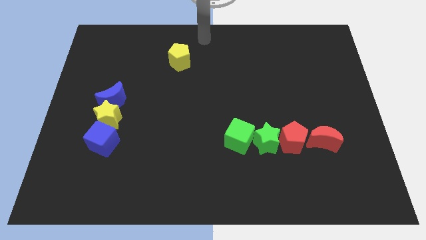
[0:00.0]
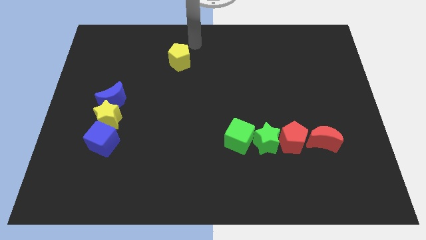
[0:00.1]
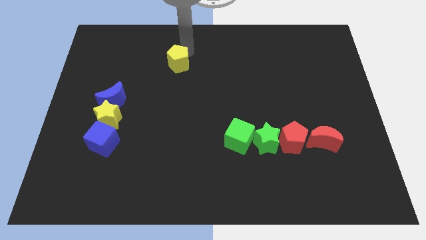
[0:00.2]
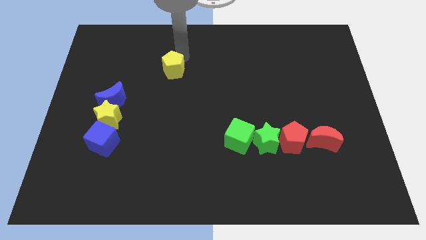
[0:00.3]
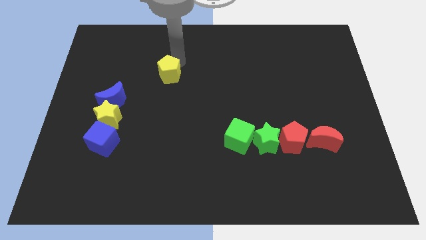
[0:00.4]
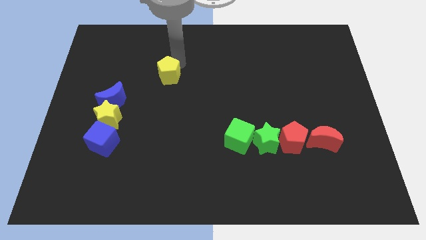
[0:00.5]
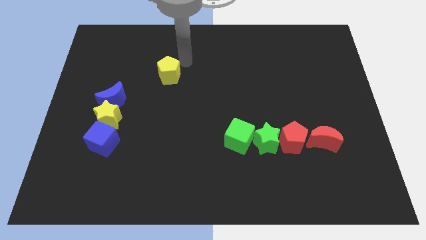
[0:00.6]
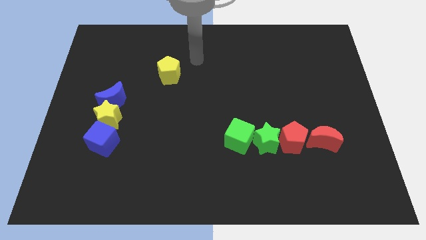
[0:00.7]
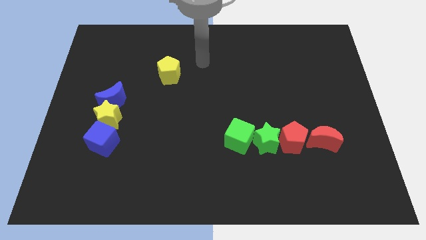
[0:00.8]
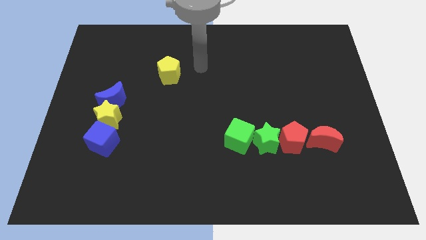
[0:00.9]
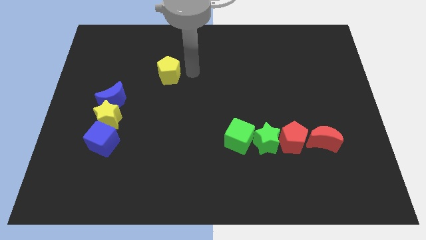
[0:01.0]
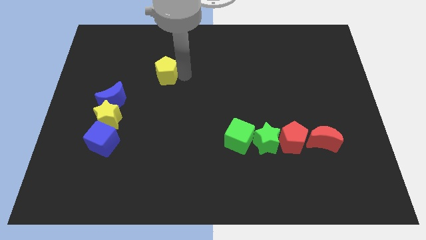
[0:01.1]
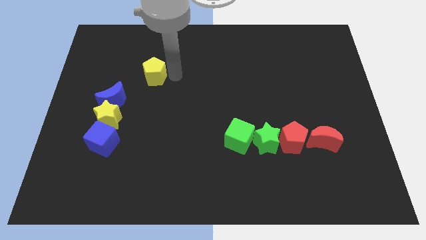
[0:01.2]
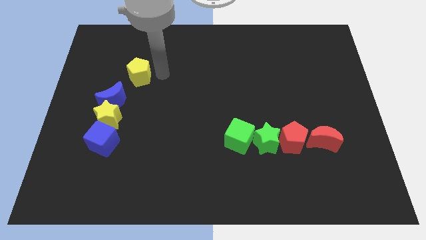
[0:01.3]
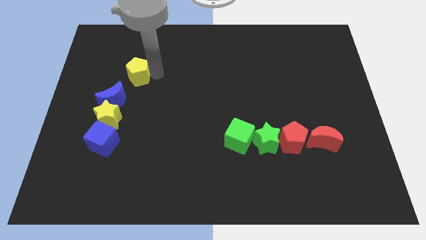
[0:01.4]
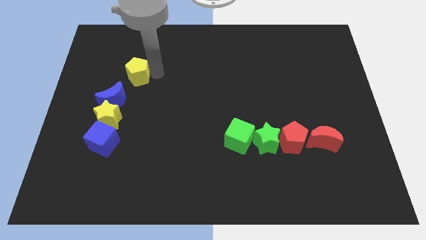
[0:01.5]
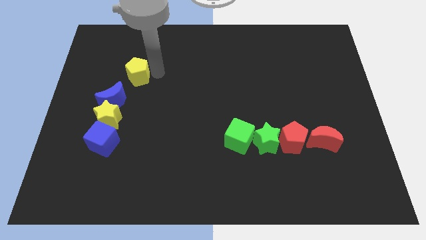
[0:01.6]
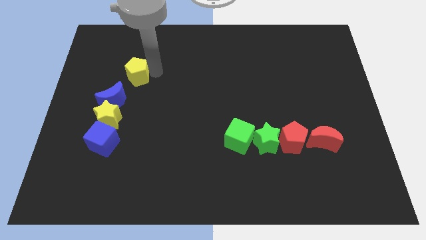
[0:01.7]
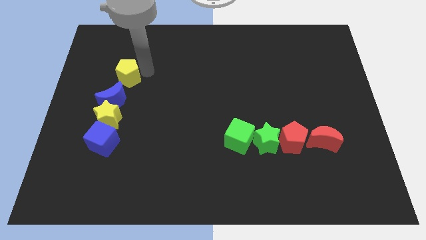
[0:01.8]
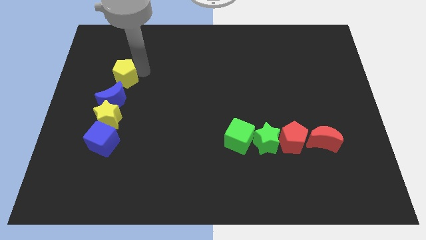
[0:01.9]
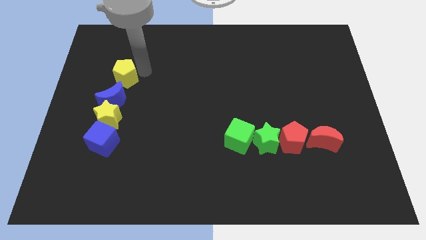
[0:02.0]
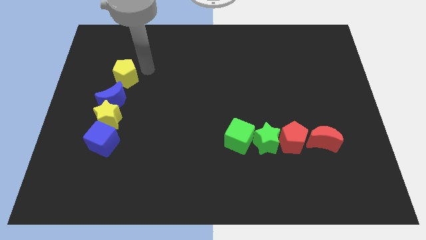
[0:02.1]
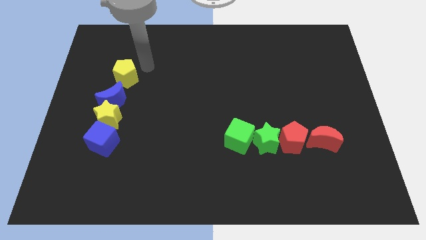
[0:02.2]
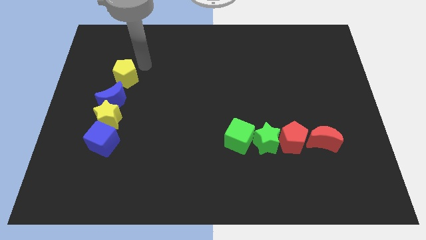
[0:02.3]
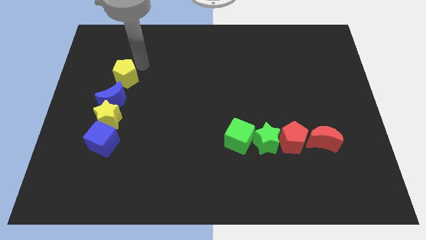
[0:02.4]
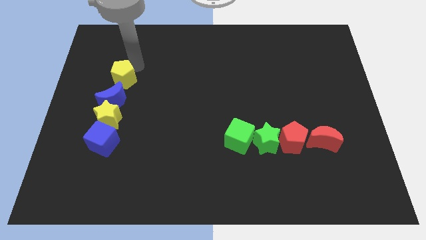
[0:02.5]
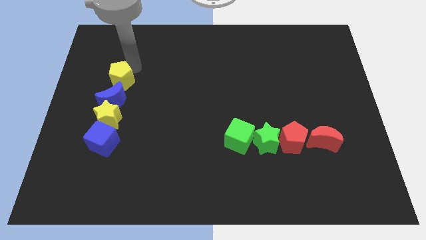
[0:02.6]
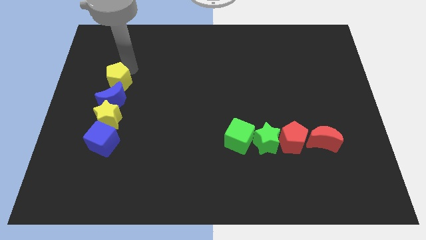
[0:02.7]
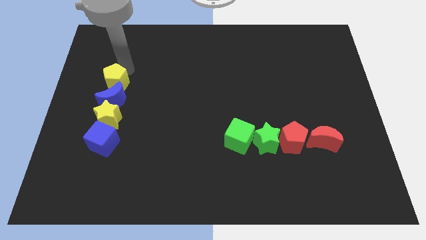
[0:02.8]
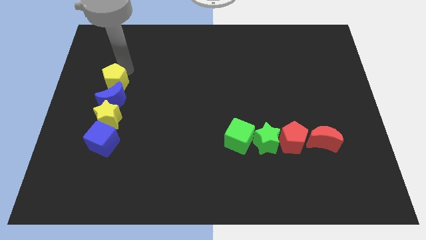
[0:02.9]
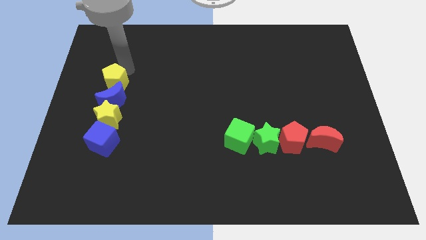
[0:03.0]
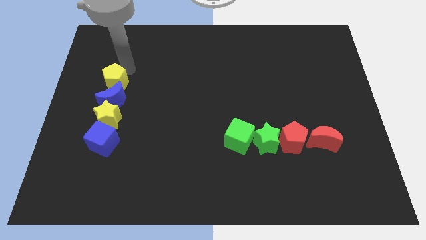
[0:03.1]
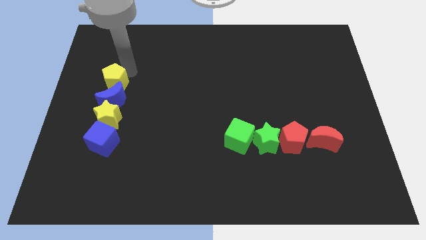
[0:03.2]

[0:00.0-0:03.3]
place the yellow pentagon on top of the blue crescent to form a vertical

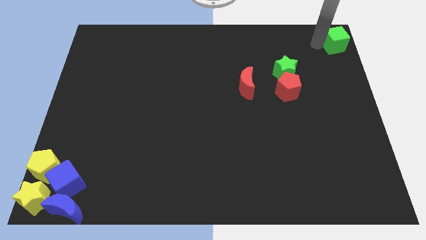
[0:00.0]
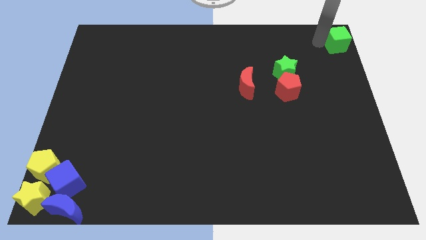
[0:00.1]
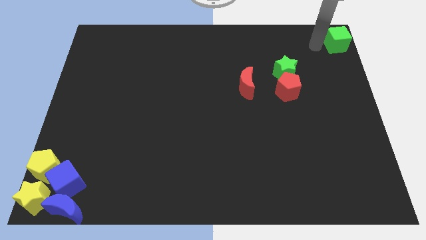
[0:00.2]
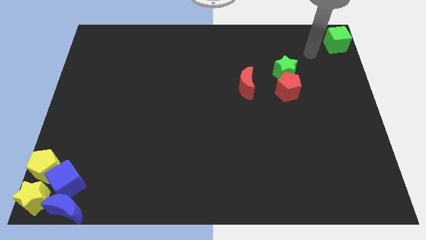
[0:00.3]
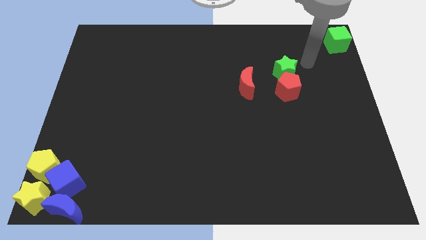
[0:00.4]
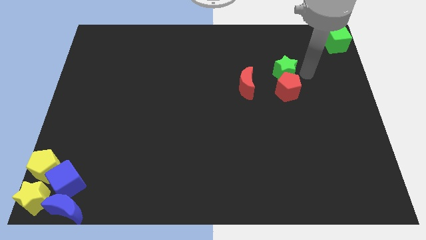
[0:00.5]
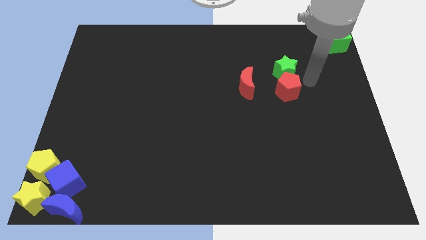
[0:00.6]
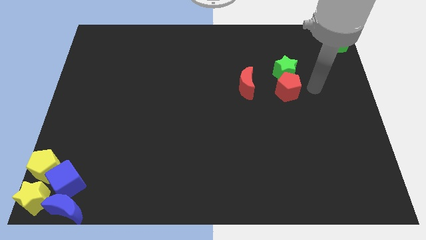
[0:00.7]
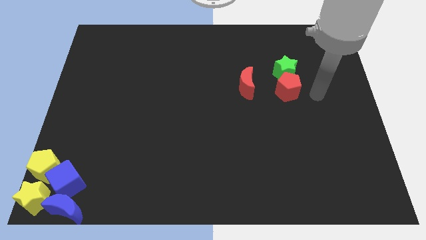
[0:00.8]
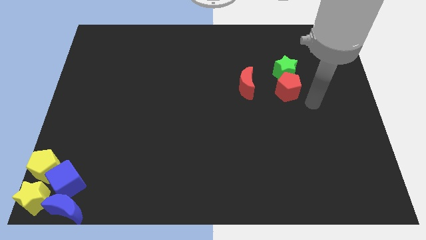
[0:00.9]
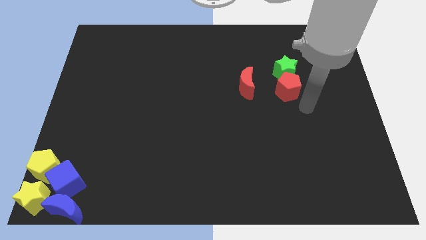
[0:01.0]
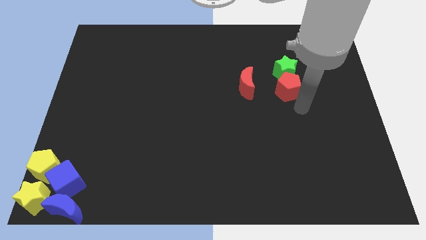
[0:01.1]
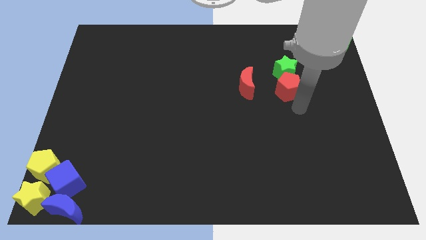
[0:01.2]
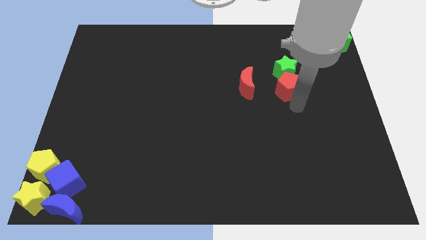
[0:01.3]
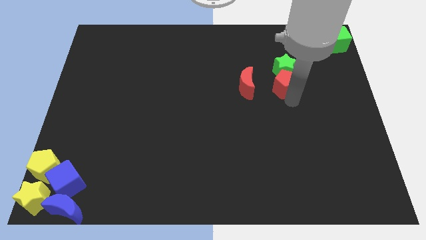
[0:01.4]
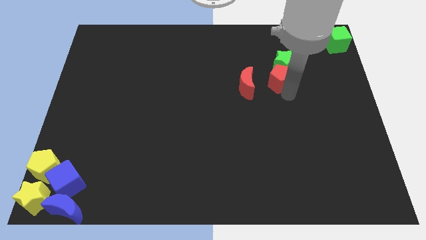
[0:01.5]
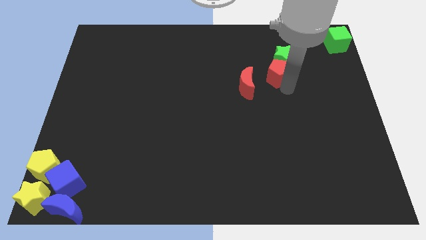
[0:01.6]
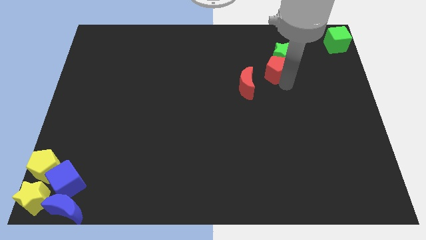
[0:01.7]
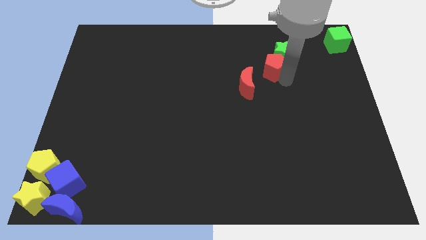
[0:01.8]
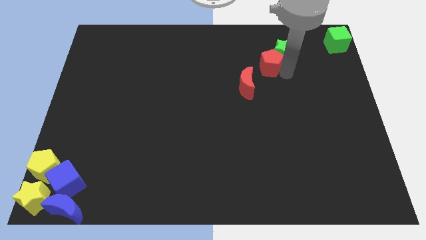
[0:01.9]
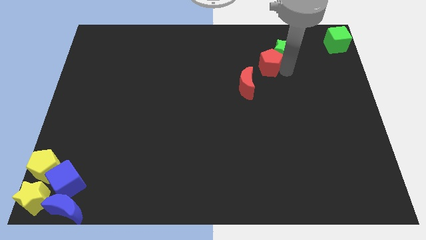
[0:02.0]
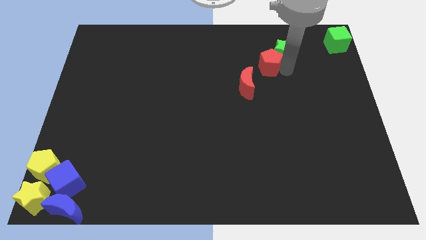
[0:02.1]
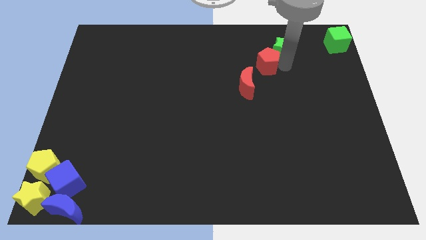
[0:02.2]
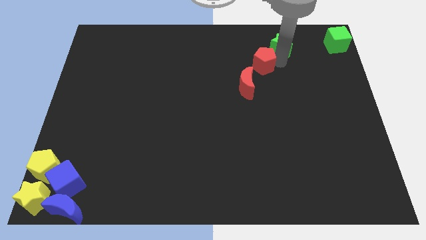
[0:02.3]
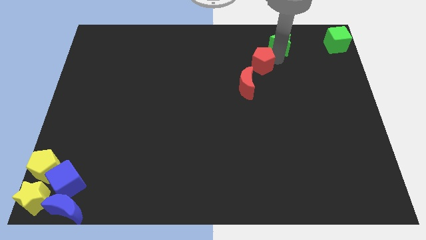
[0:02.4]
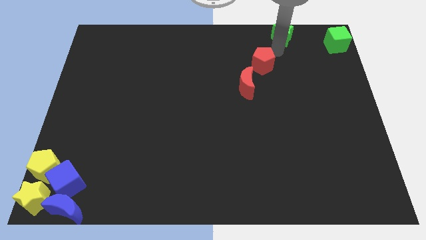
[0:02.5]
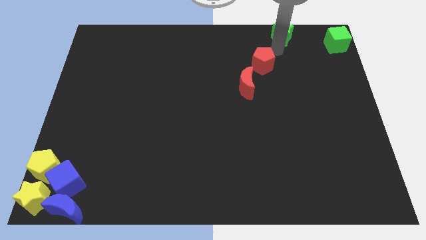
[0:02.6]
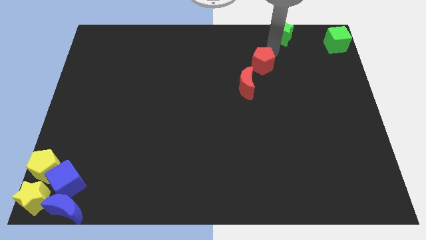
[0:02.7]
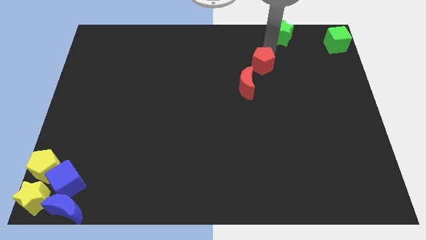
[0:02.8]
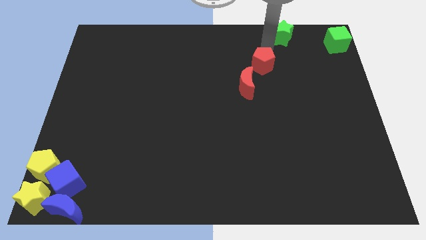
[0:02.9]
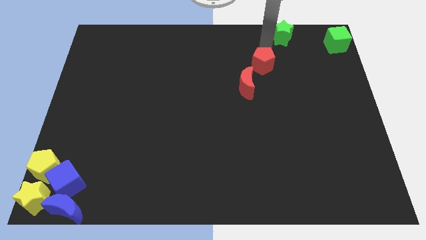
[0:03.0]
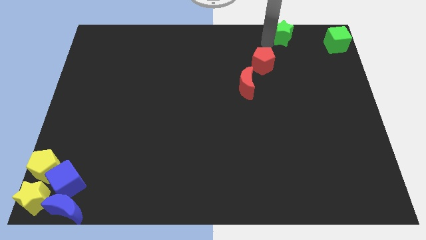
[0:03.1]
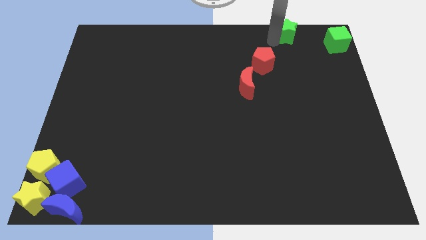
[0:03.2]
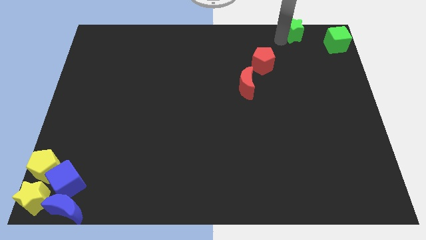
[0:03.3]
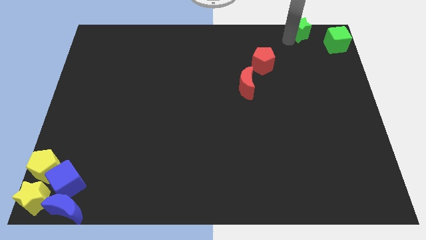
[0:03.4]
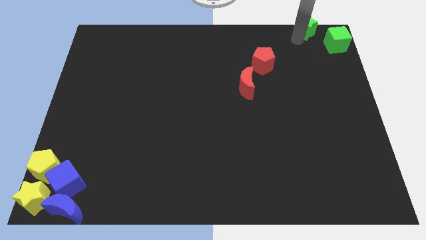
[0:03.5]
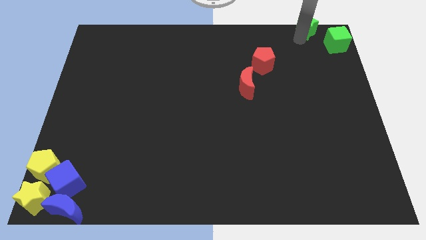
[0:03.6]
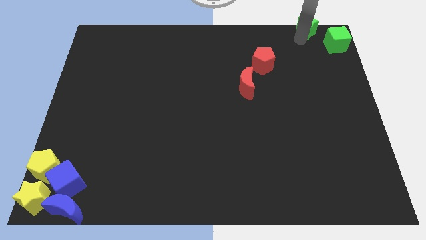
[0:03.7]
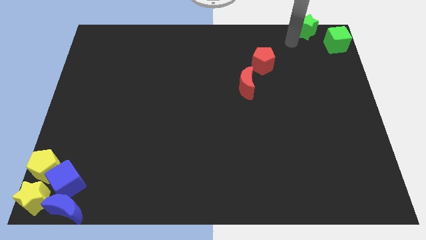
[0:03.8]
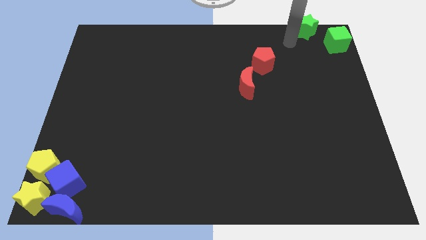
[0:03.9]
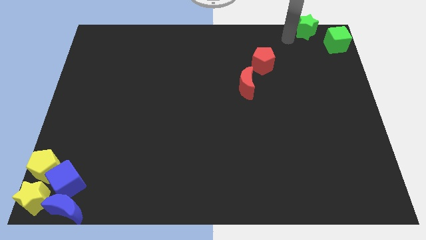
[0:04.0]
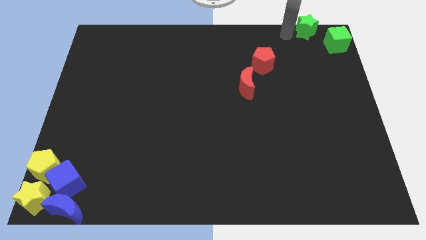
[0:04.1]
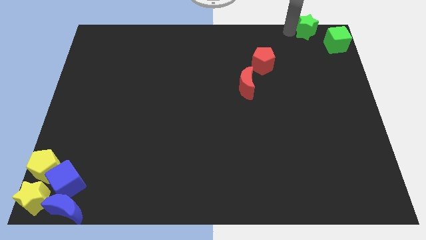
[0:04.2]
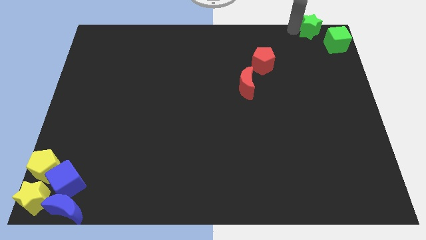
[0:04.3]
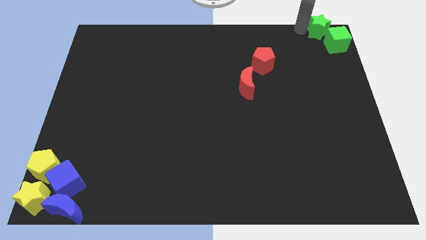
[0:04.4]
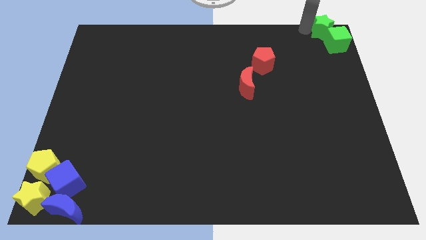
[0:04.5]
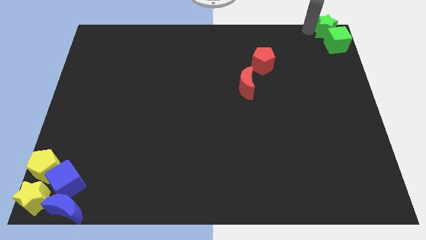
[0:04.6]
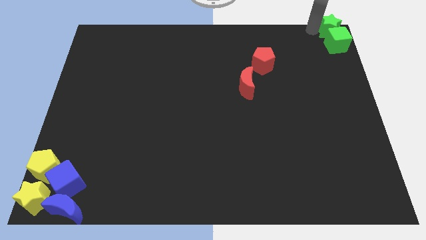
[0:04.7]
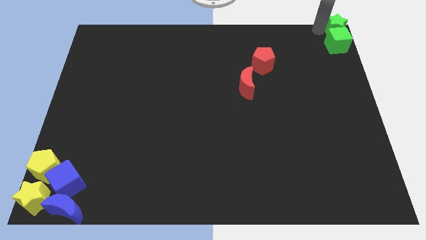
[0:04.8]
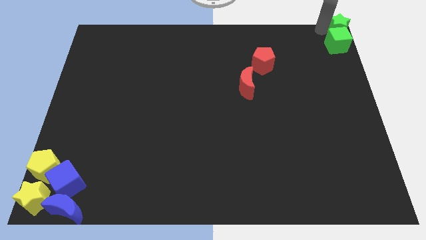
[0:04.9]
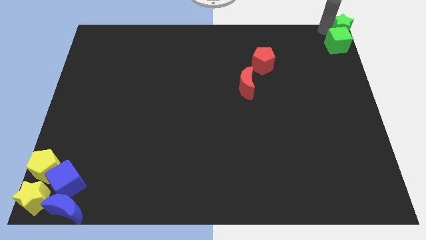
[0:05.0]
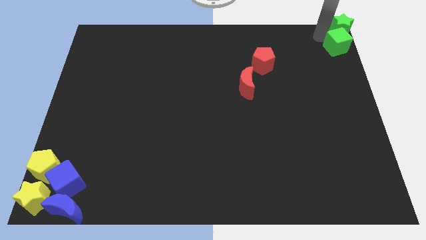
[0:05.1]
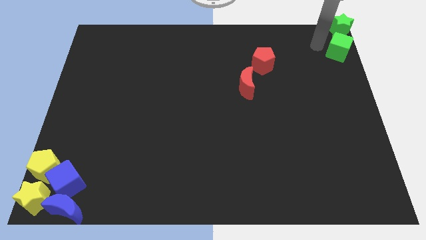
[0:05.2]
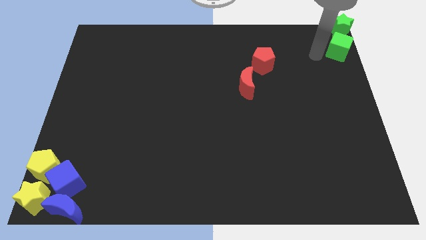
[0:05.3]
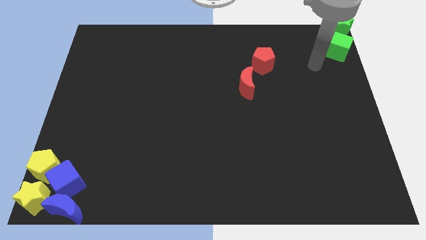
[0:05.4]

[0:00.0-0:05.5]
slide the green star into the top right corner

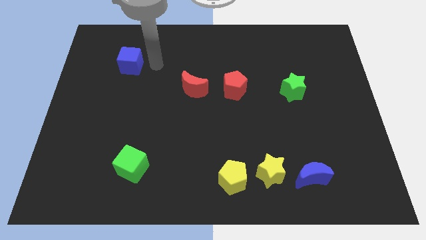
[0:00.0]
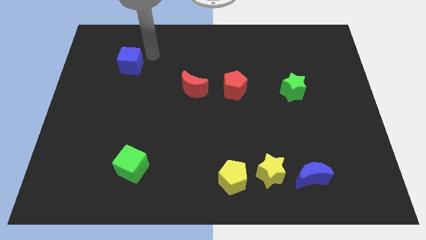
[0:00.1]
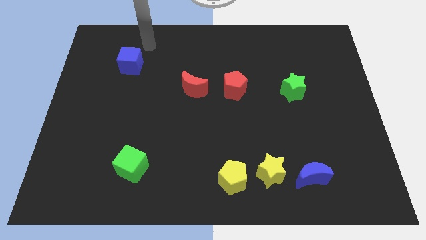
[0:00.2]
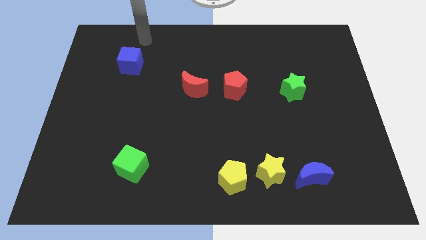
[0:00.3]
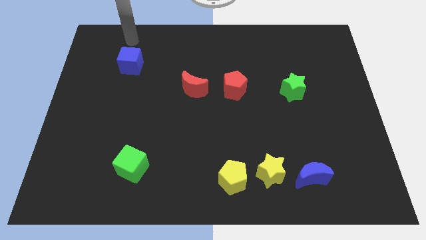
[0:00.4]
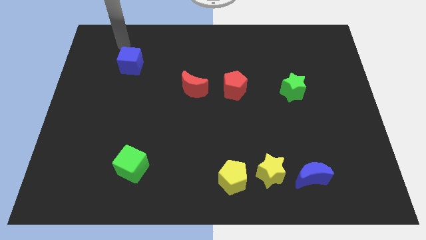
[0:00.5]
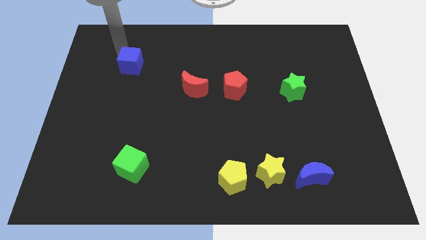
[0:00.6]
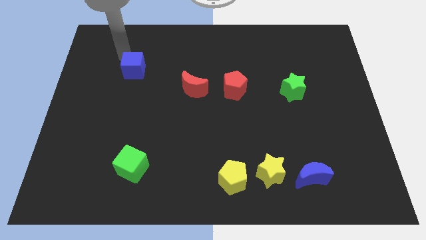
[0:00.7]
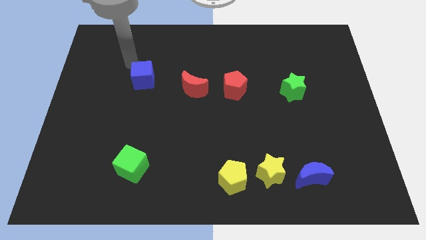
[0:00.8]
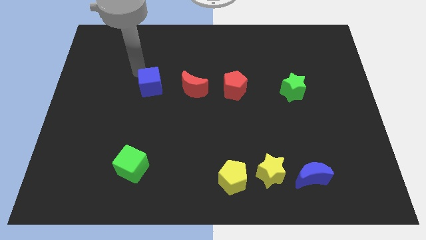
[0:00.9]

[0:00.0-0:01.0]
place the blue cube left to the red moon
